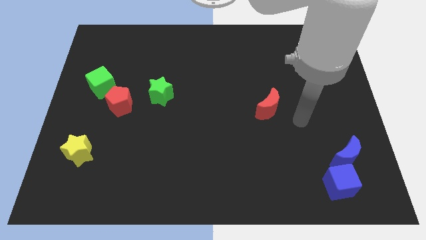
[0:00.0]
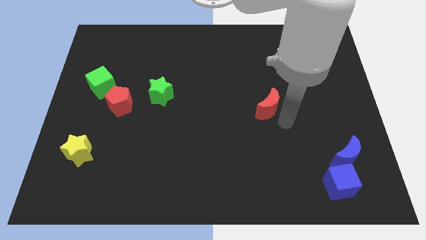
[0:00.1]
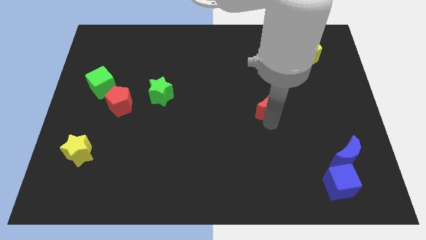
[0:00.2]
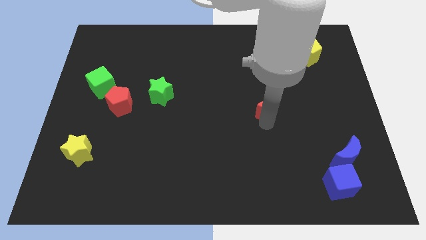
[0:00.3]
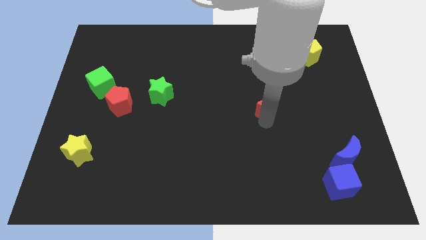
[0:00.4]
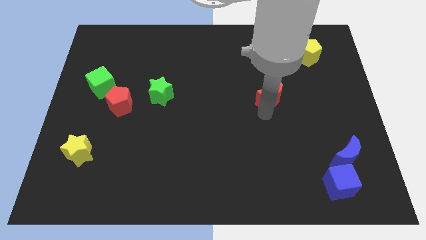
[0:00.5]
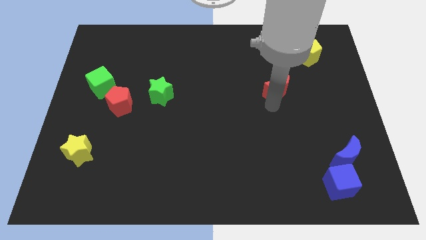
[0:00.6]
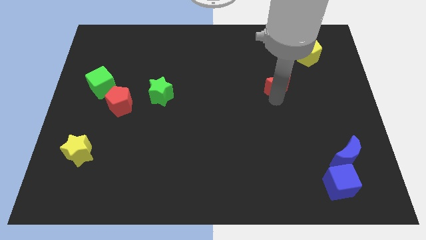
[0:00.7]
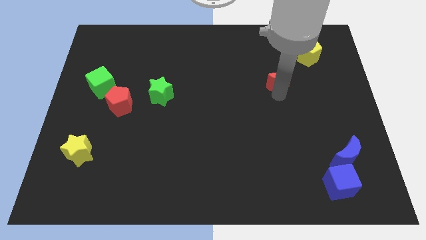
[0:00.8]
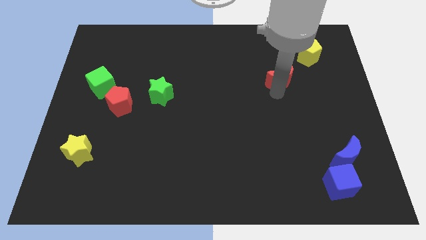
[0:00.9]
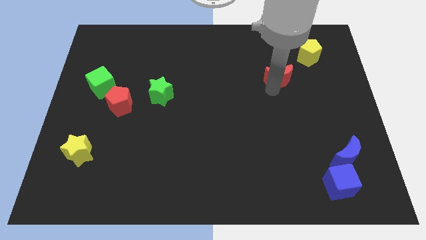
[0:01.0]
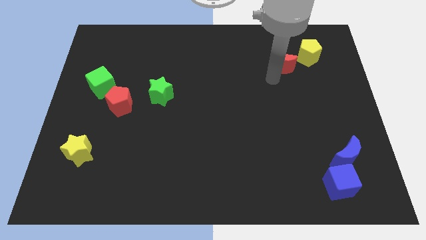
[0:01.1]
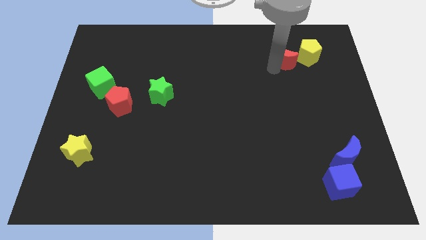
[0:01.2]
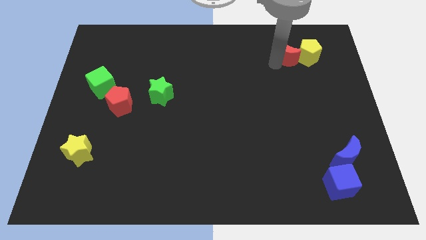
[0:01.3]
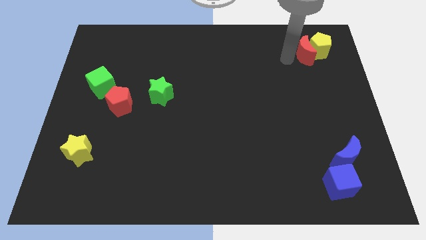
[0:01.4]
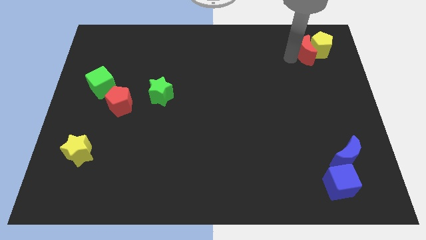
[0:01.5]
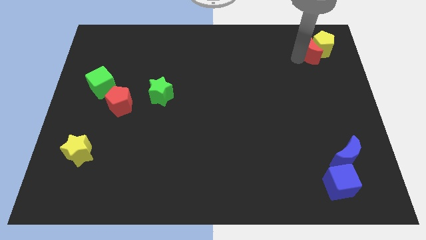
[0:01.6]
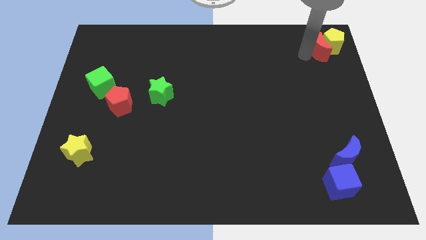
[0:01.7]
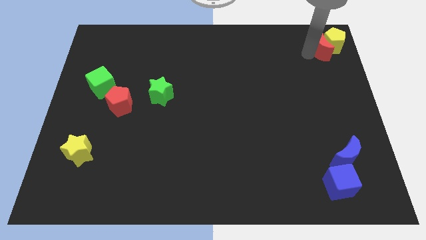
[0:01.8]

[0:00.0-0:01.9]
move the red crescent into yellow pentagon

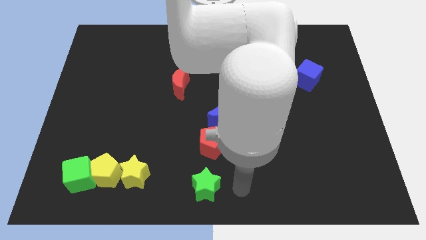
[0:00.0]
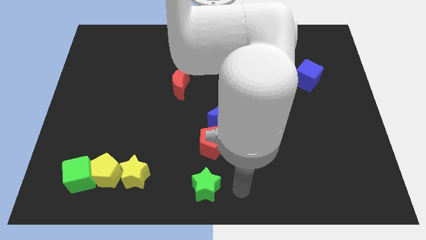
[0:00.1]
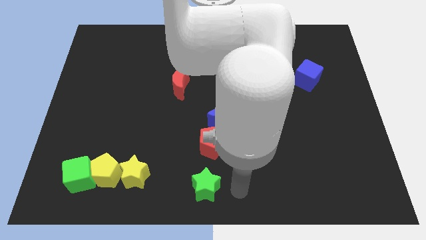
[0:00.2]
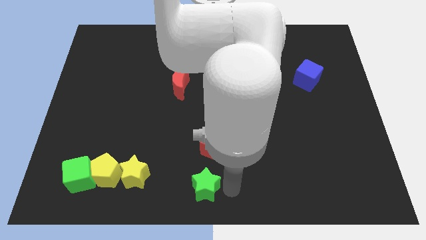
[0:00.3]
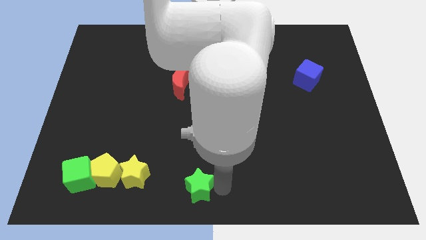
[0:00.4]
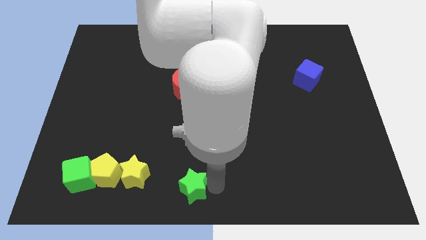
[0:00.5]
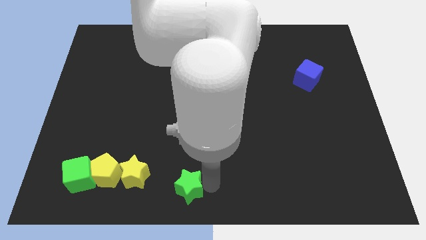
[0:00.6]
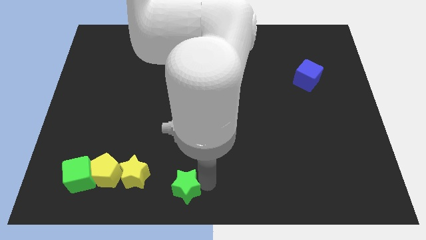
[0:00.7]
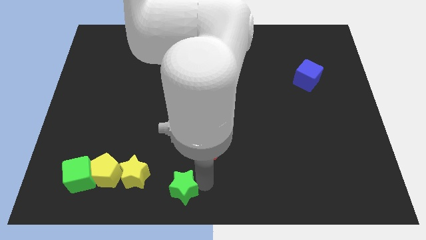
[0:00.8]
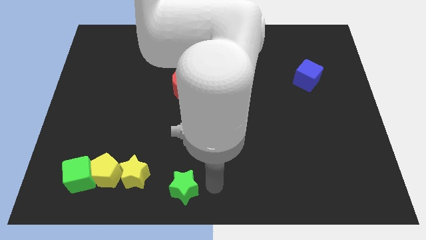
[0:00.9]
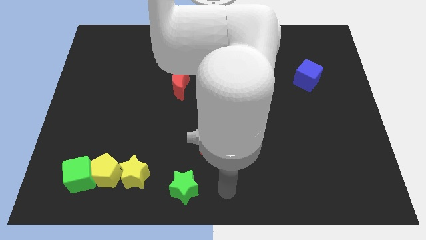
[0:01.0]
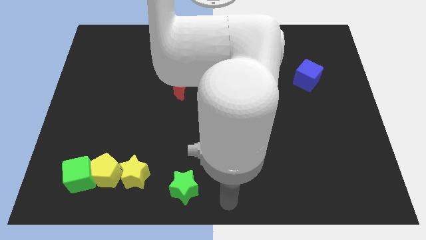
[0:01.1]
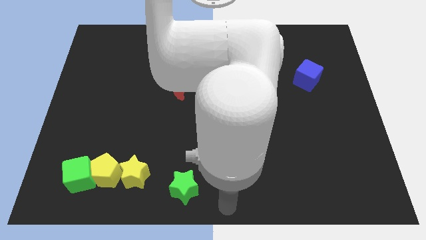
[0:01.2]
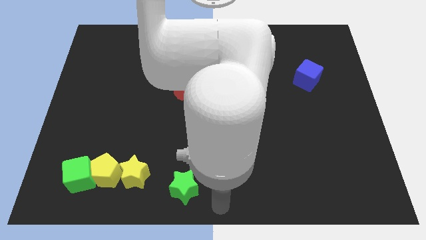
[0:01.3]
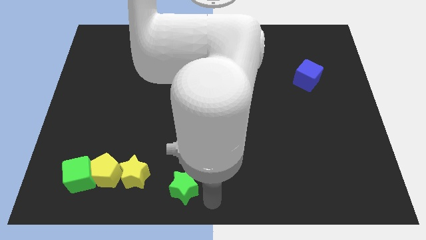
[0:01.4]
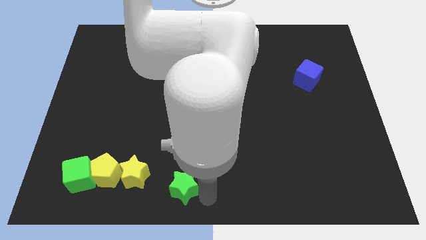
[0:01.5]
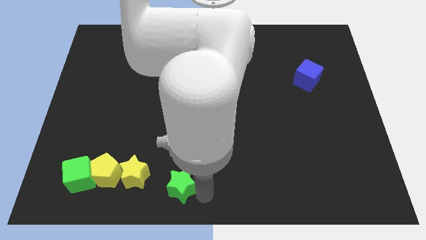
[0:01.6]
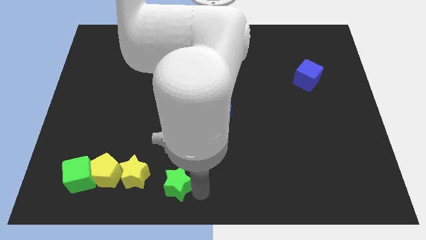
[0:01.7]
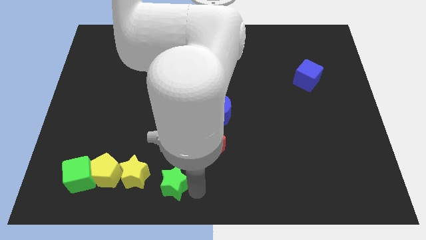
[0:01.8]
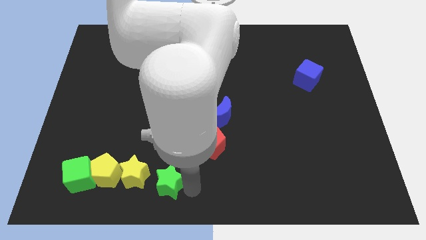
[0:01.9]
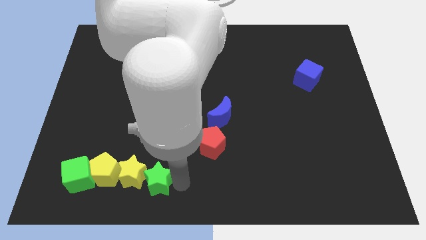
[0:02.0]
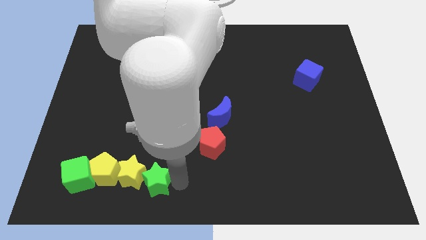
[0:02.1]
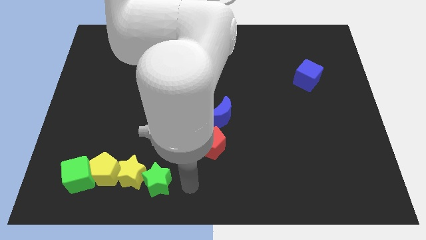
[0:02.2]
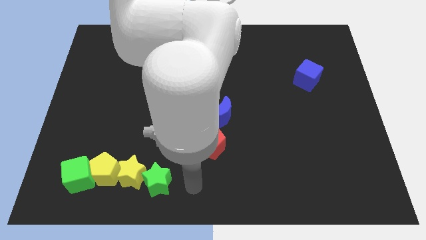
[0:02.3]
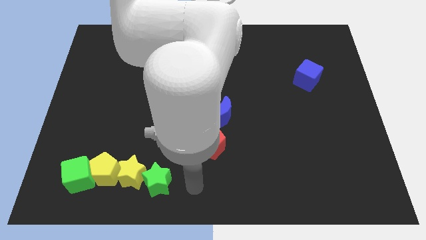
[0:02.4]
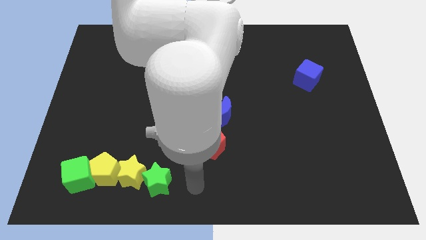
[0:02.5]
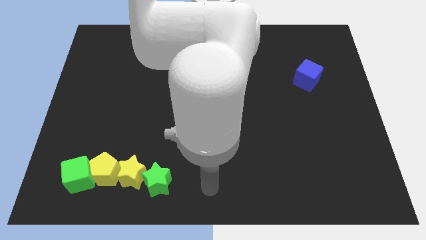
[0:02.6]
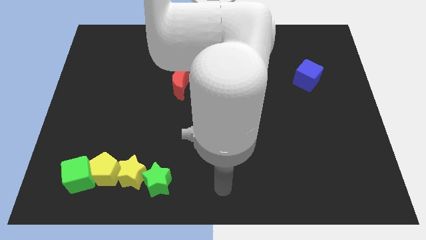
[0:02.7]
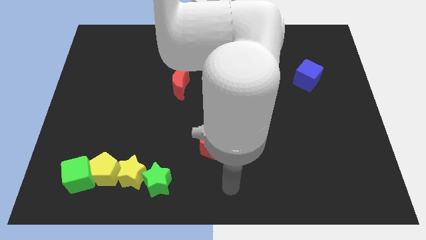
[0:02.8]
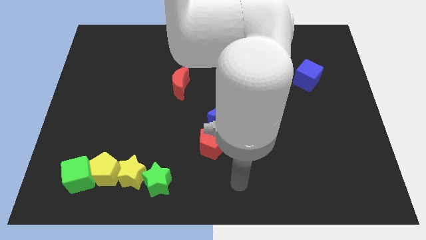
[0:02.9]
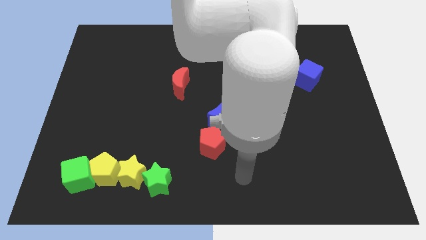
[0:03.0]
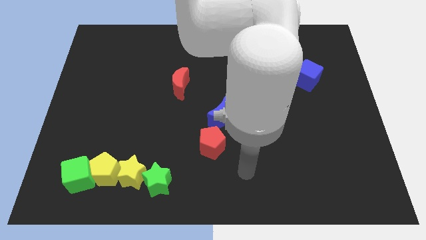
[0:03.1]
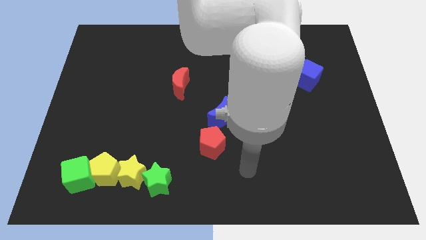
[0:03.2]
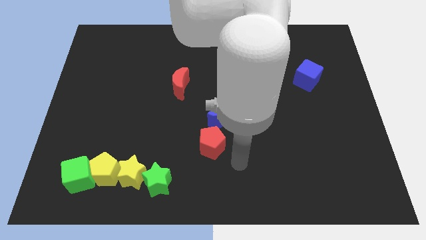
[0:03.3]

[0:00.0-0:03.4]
place the green star right to the yellow star

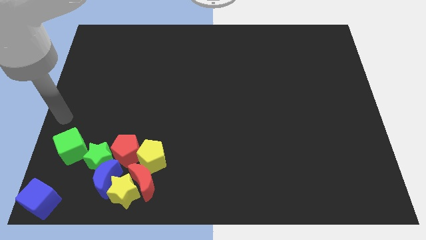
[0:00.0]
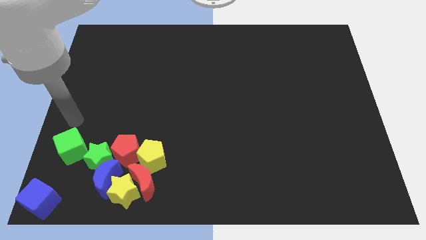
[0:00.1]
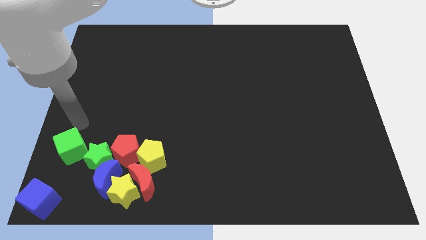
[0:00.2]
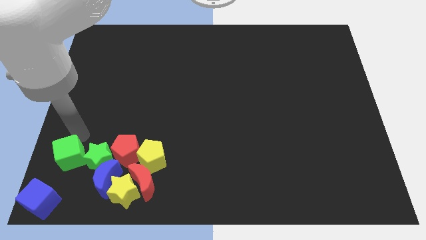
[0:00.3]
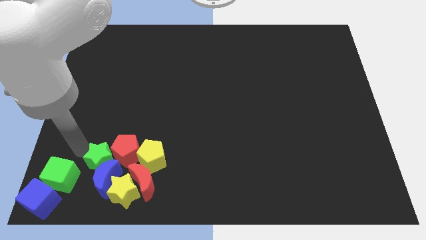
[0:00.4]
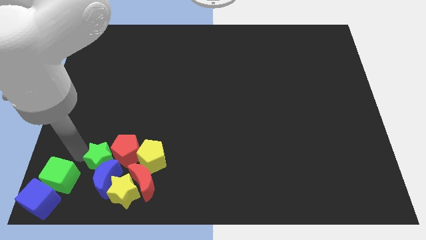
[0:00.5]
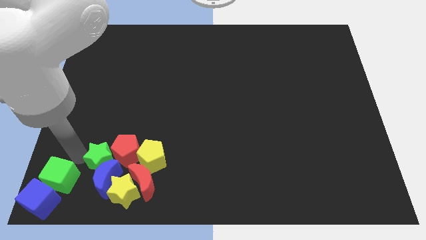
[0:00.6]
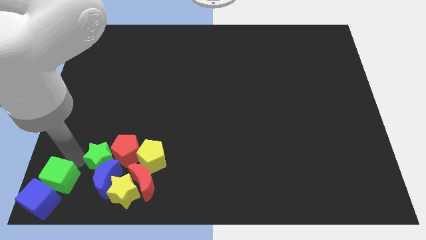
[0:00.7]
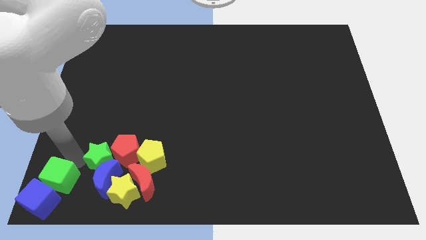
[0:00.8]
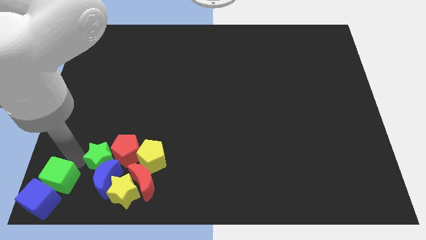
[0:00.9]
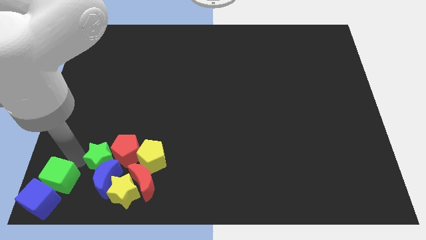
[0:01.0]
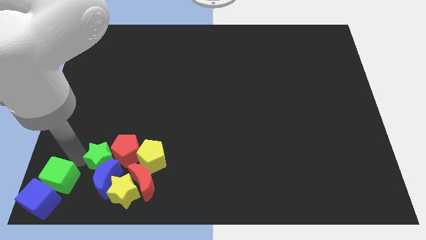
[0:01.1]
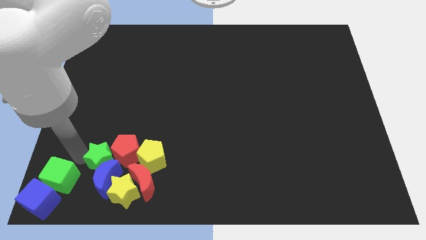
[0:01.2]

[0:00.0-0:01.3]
push the green cube close to the blue cube towards the bottom left corner of the board

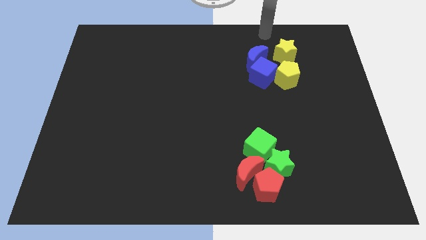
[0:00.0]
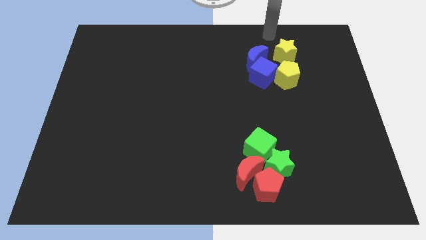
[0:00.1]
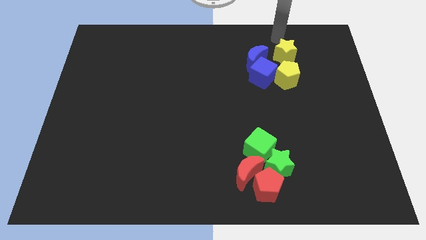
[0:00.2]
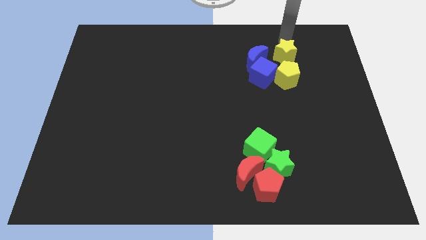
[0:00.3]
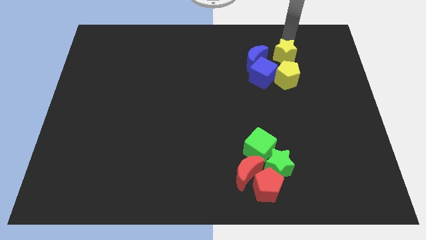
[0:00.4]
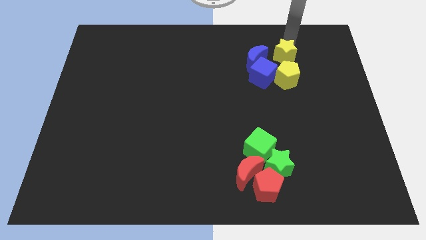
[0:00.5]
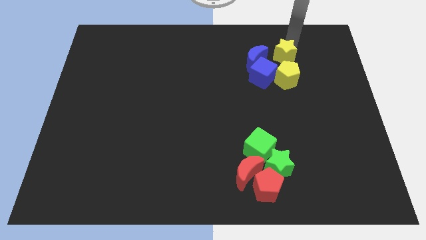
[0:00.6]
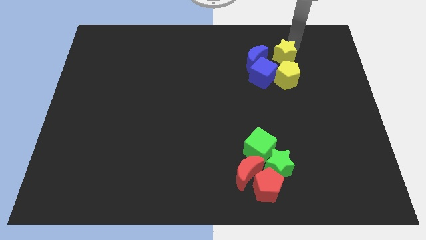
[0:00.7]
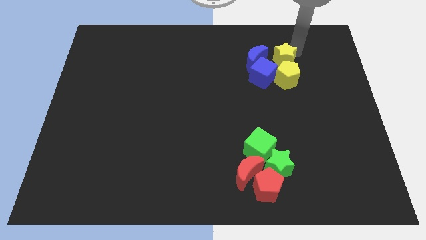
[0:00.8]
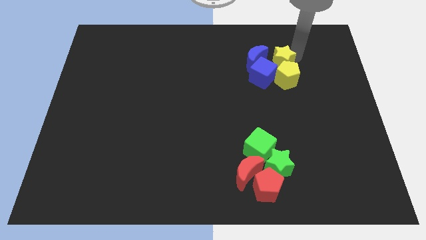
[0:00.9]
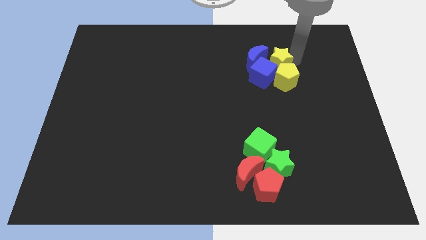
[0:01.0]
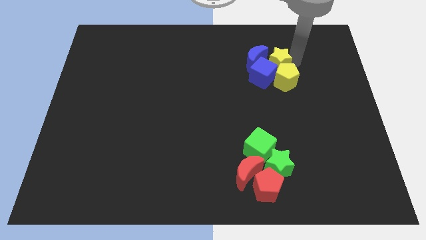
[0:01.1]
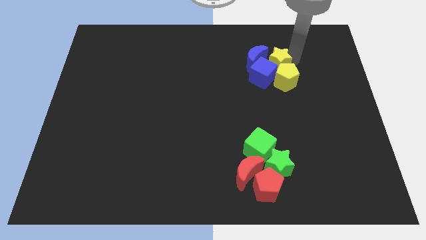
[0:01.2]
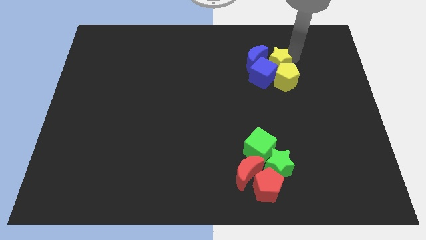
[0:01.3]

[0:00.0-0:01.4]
add yellow star to the group of blocks

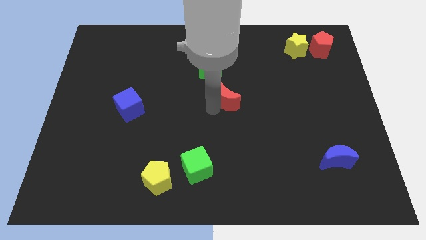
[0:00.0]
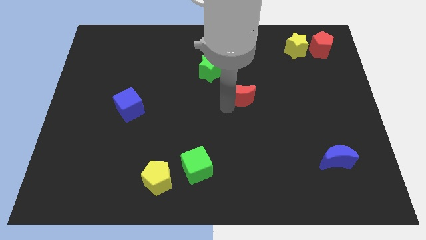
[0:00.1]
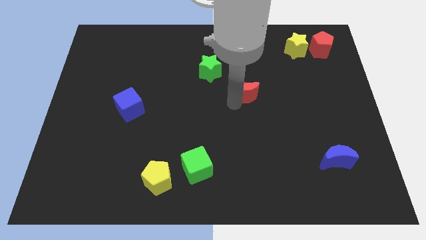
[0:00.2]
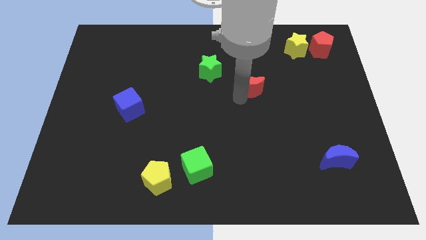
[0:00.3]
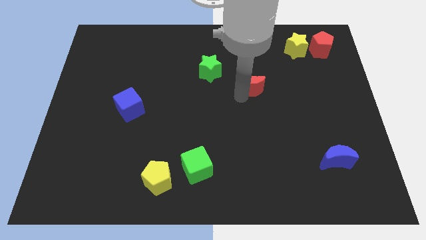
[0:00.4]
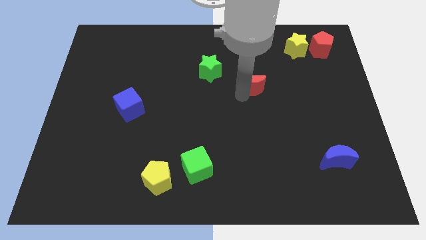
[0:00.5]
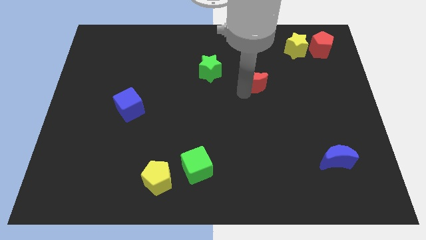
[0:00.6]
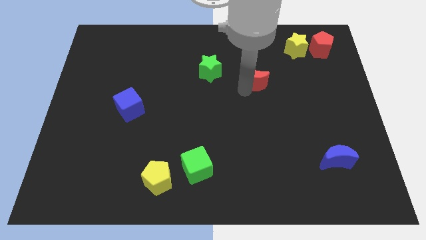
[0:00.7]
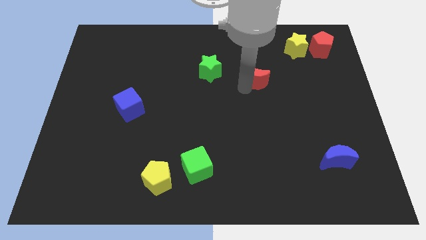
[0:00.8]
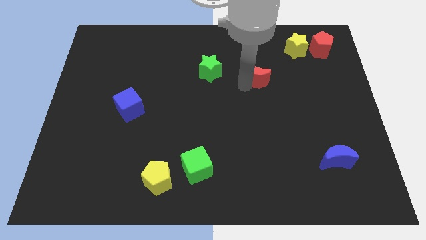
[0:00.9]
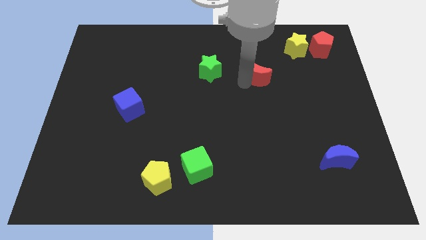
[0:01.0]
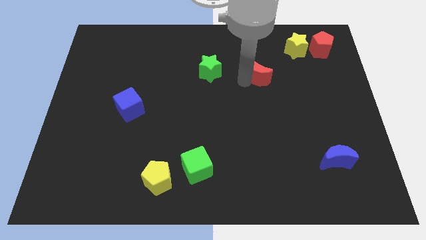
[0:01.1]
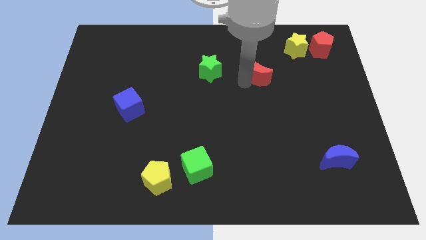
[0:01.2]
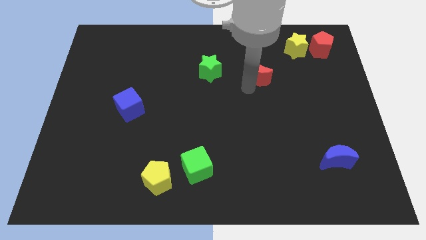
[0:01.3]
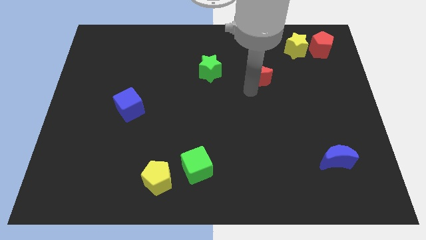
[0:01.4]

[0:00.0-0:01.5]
place the red moon bottom left to the yellow star
